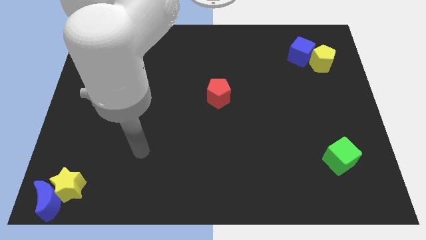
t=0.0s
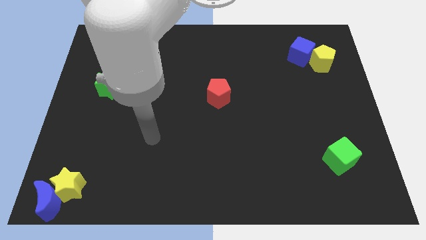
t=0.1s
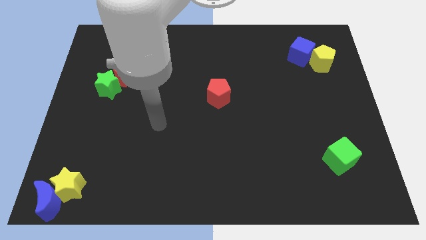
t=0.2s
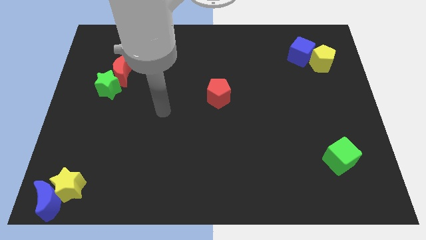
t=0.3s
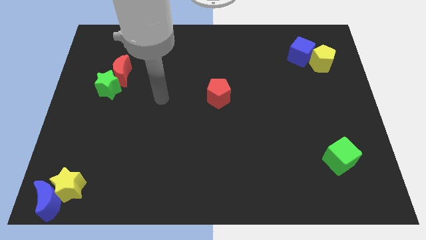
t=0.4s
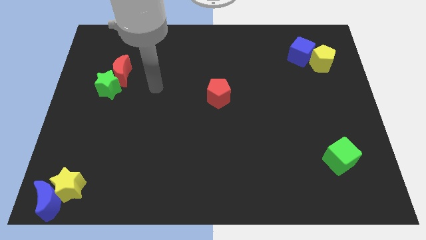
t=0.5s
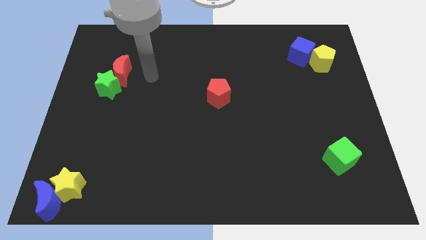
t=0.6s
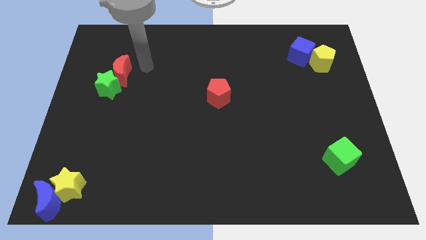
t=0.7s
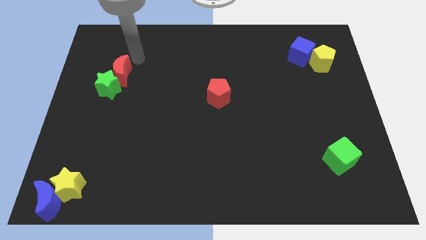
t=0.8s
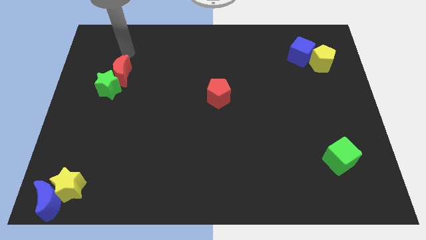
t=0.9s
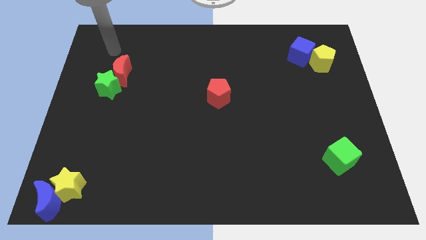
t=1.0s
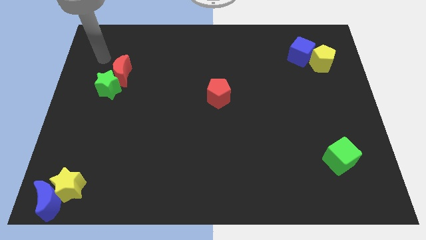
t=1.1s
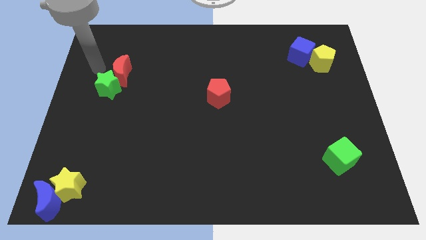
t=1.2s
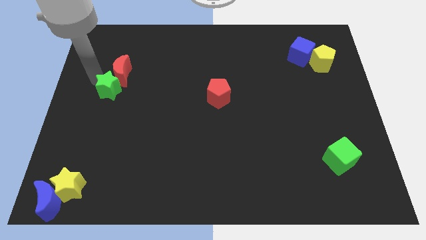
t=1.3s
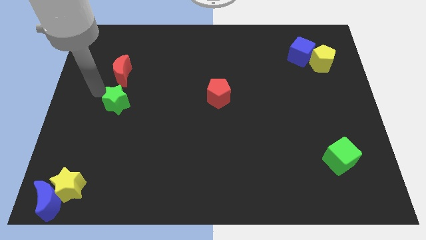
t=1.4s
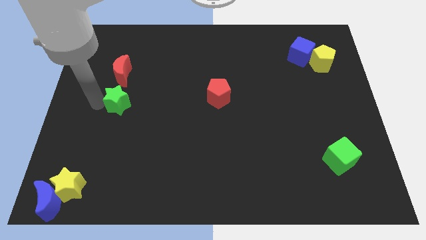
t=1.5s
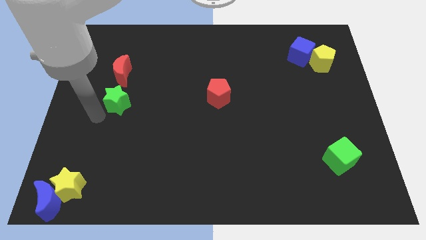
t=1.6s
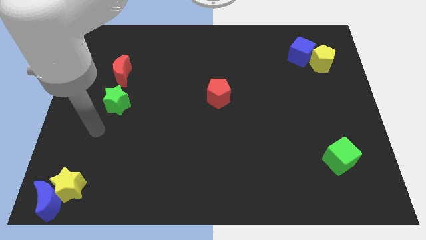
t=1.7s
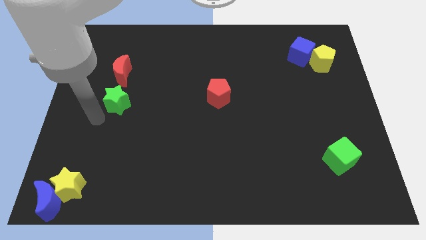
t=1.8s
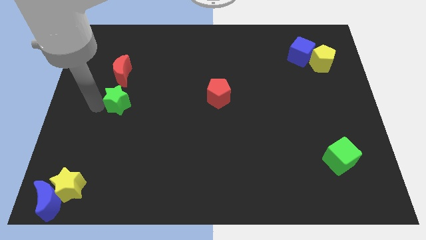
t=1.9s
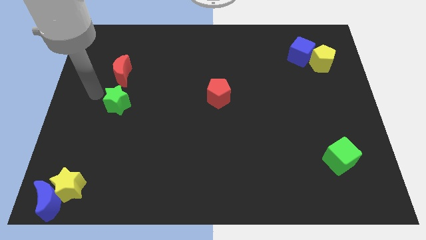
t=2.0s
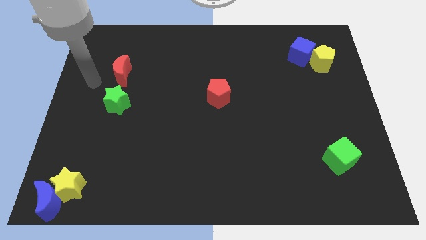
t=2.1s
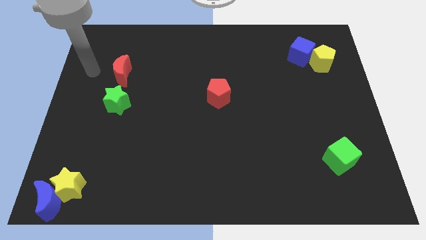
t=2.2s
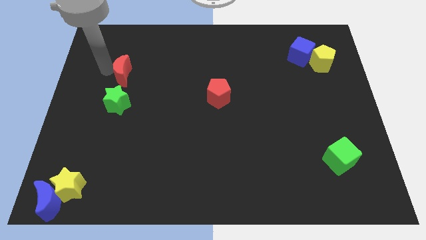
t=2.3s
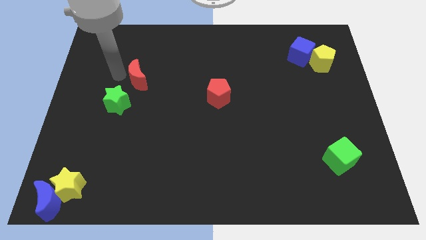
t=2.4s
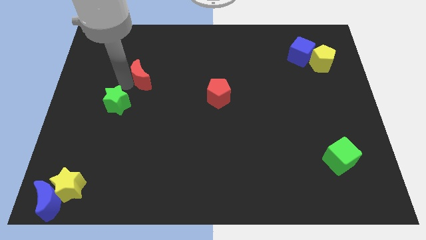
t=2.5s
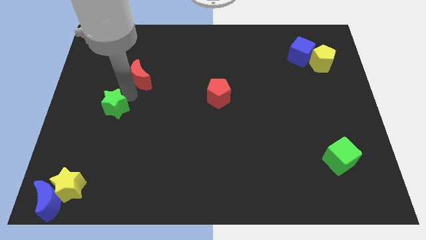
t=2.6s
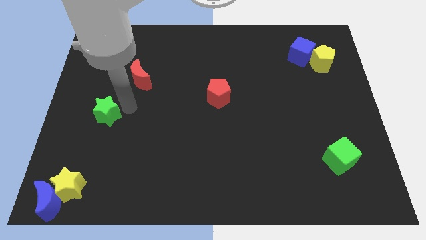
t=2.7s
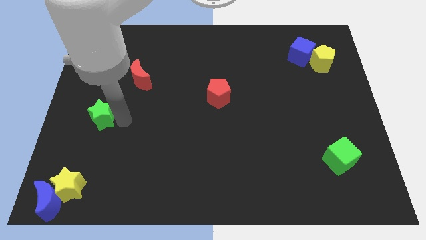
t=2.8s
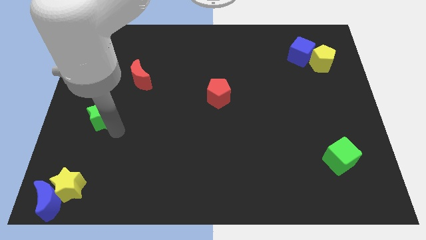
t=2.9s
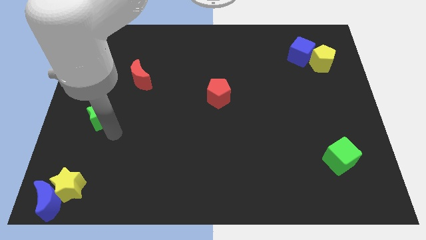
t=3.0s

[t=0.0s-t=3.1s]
separate the red crescent and the green star

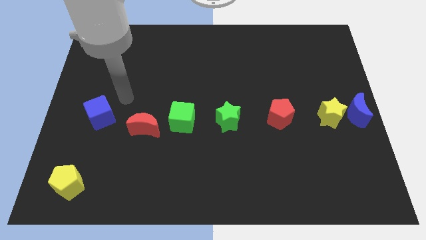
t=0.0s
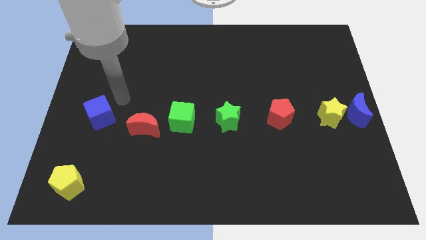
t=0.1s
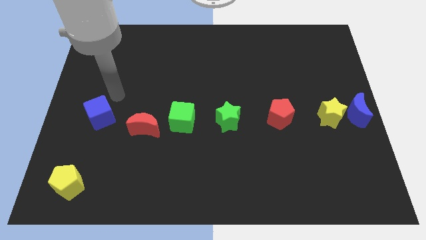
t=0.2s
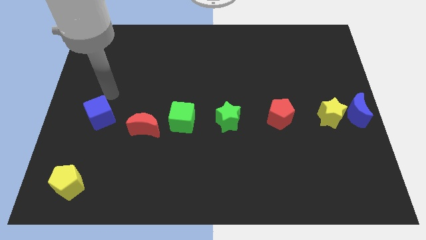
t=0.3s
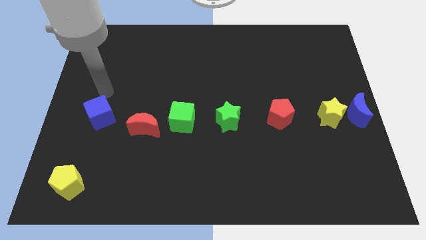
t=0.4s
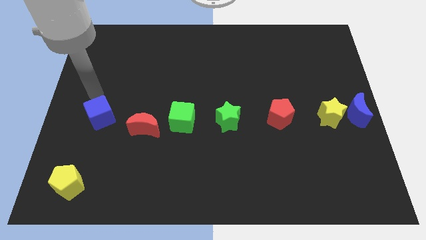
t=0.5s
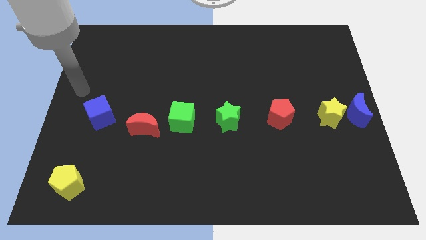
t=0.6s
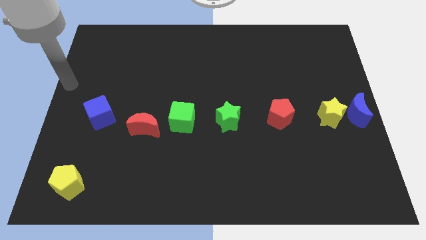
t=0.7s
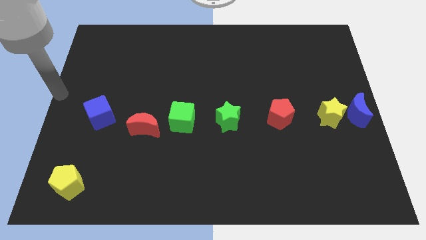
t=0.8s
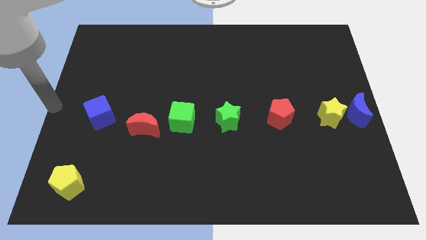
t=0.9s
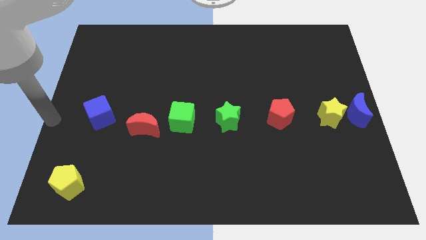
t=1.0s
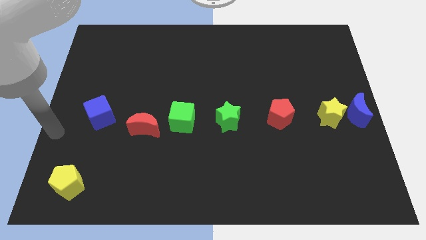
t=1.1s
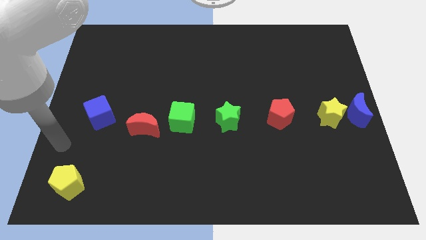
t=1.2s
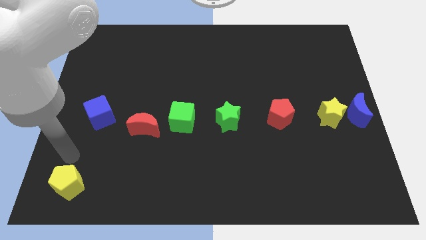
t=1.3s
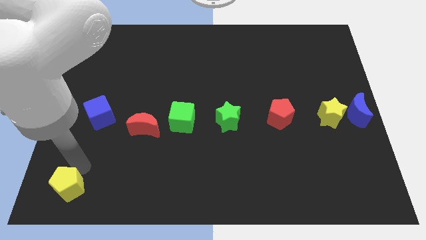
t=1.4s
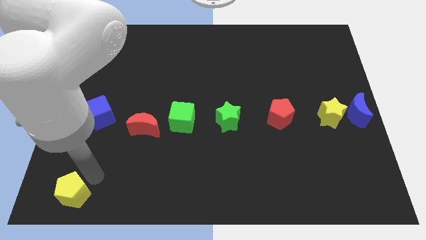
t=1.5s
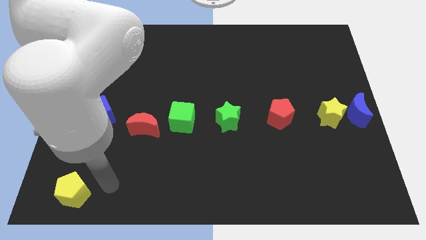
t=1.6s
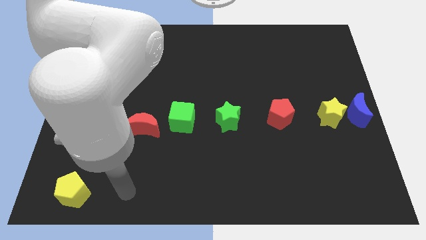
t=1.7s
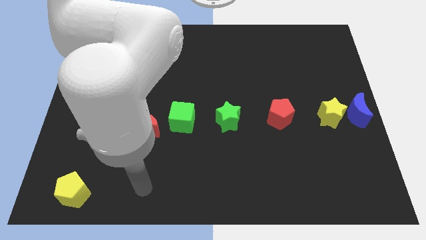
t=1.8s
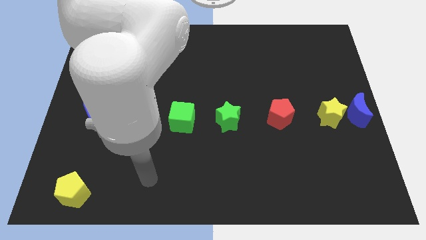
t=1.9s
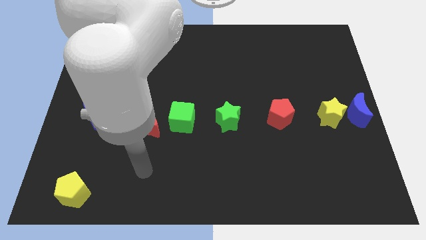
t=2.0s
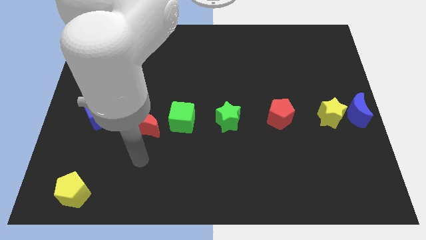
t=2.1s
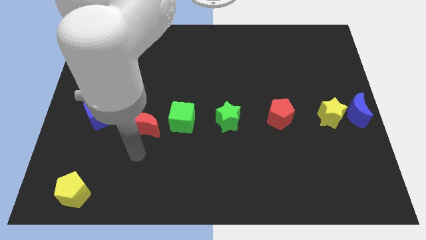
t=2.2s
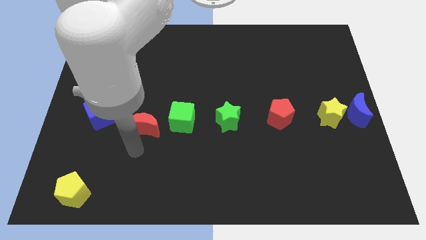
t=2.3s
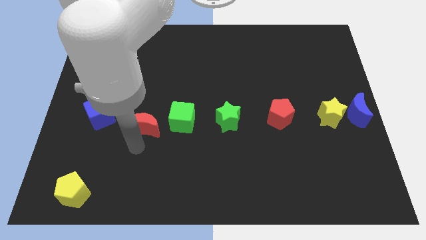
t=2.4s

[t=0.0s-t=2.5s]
slightly push yellow pentagon towards bottom of the board

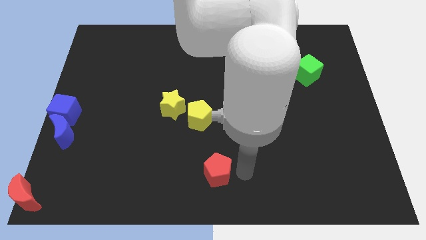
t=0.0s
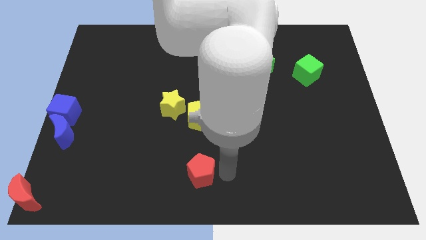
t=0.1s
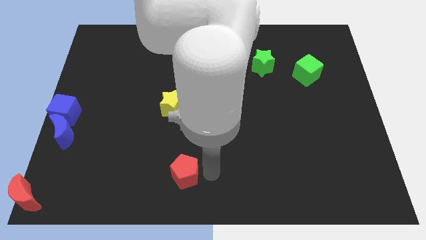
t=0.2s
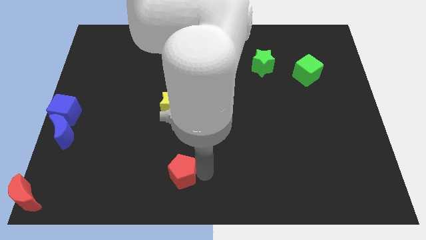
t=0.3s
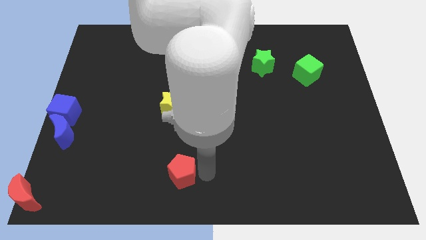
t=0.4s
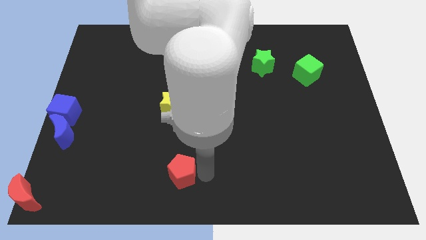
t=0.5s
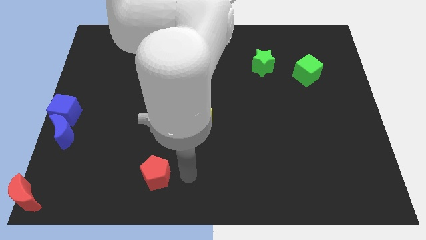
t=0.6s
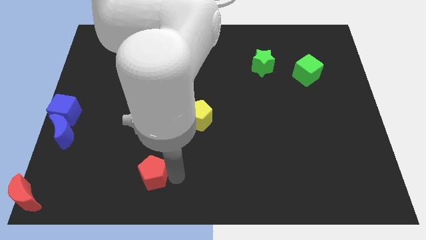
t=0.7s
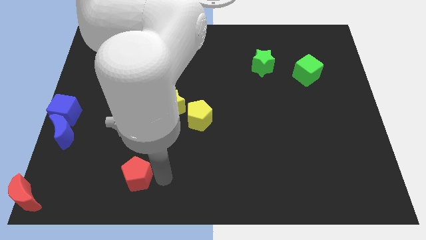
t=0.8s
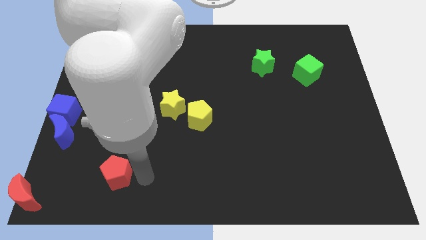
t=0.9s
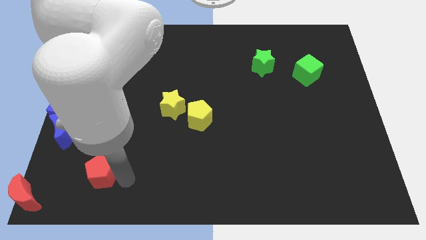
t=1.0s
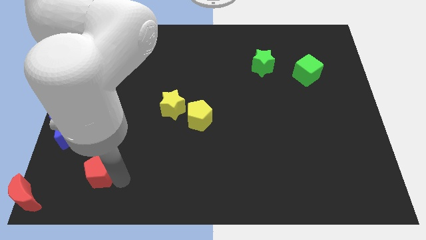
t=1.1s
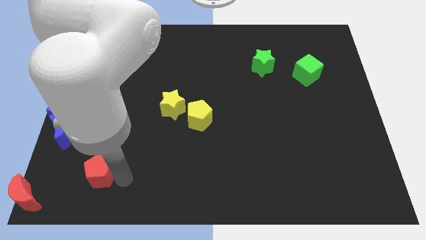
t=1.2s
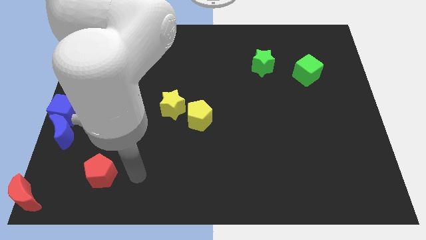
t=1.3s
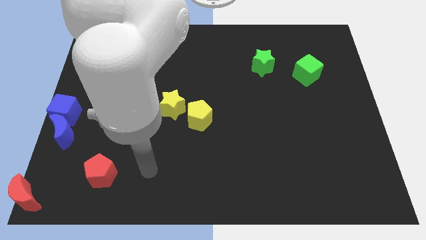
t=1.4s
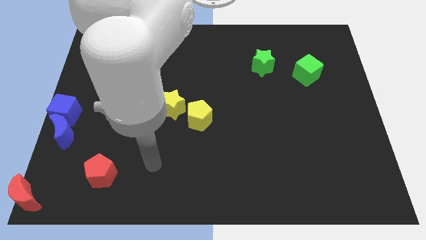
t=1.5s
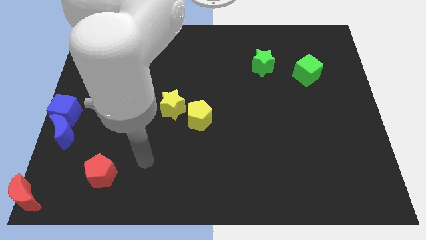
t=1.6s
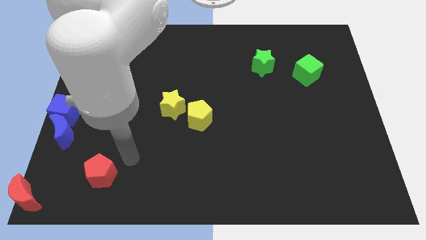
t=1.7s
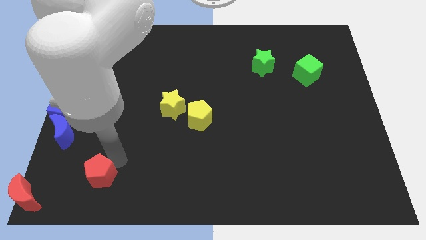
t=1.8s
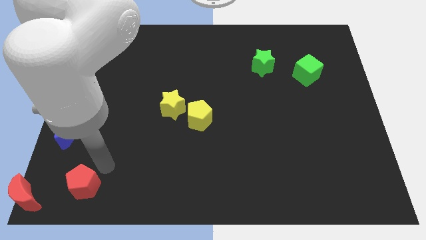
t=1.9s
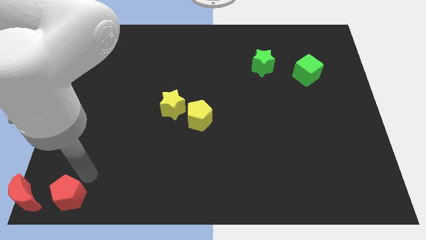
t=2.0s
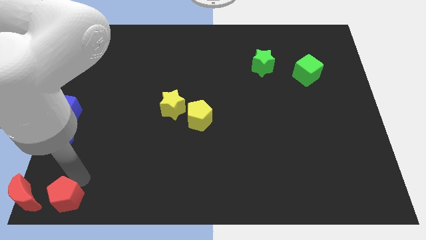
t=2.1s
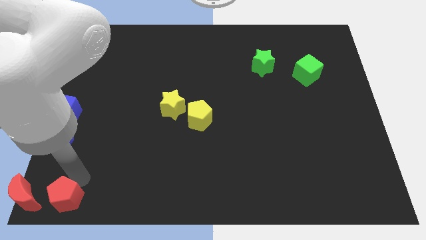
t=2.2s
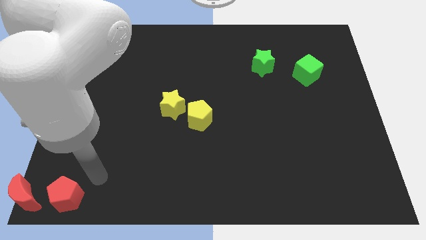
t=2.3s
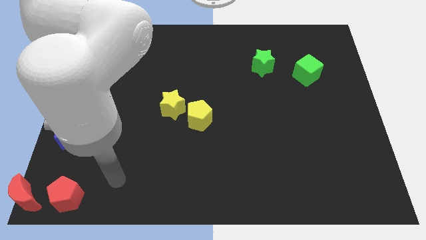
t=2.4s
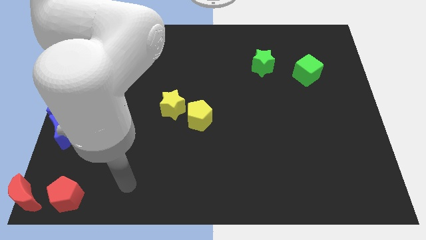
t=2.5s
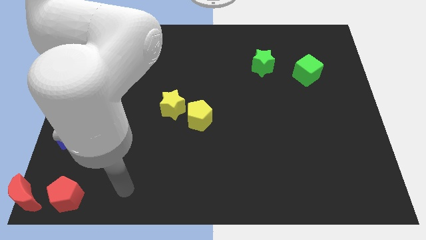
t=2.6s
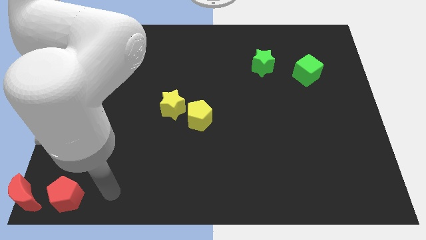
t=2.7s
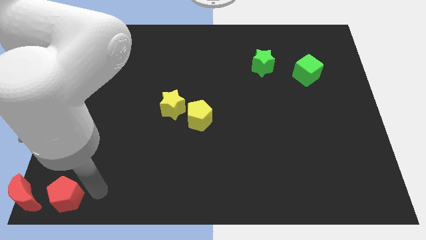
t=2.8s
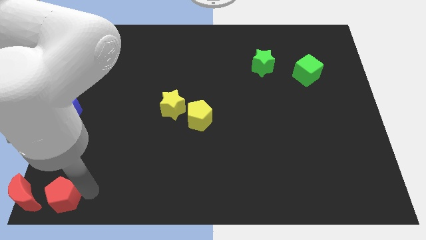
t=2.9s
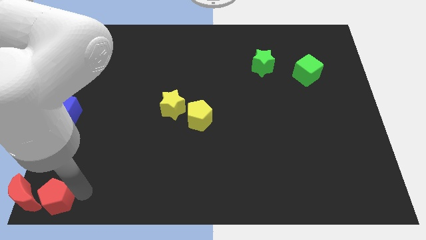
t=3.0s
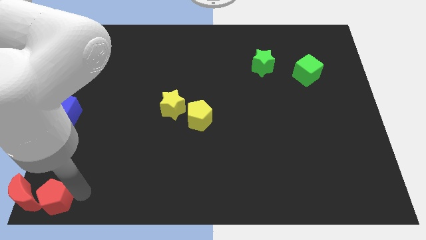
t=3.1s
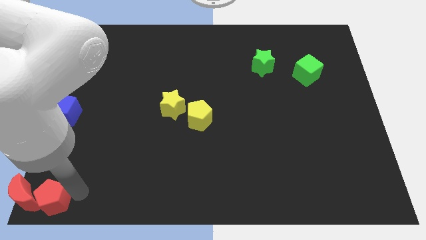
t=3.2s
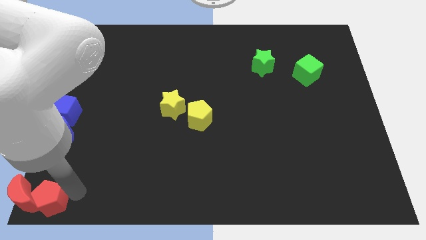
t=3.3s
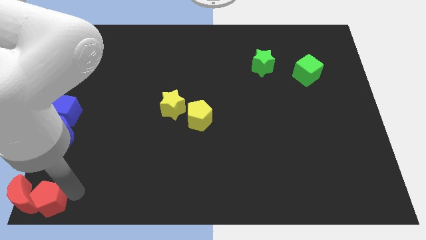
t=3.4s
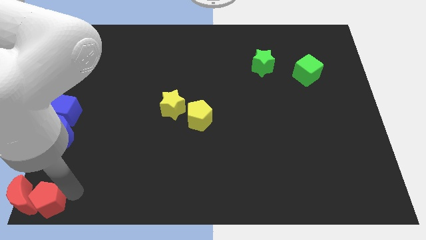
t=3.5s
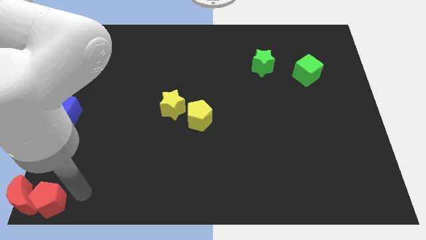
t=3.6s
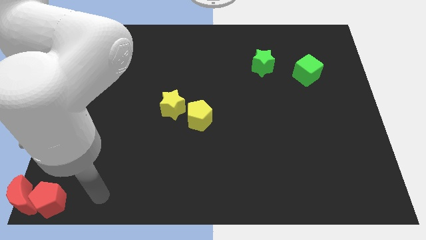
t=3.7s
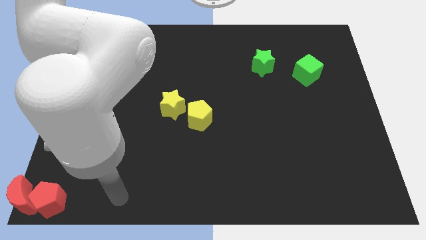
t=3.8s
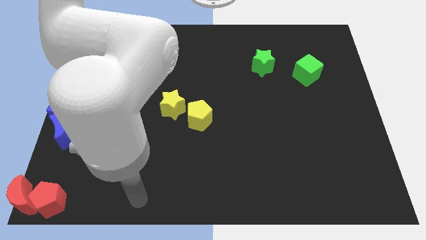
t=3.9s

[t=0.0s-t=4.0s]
push the red pentagon into the red crescent
